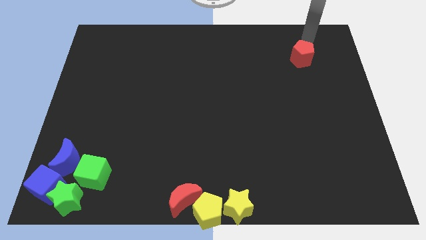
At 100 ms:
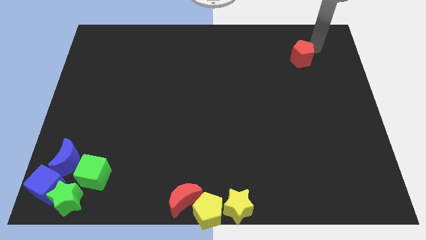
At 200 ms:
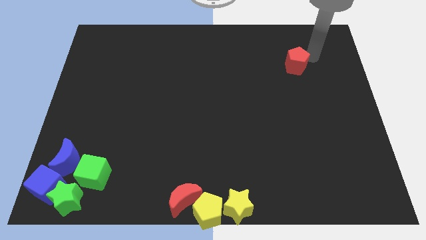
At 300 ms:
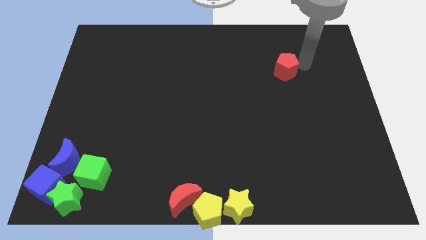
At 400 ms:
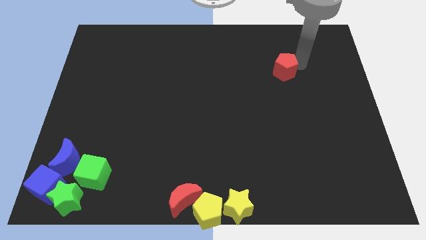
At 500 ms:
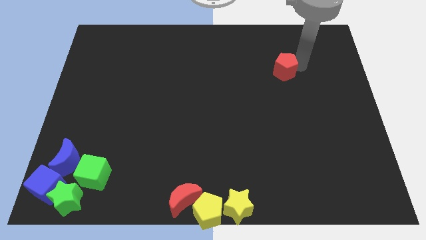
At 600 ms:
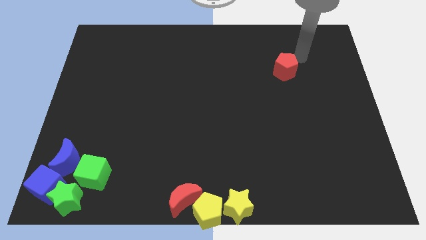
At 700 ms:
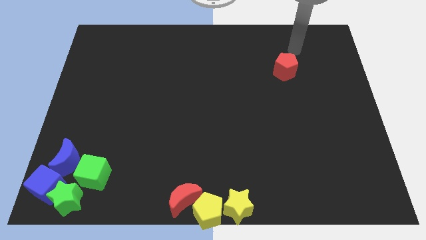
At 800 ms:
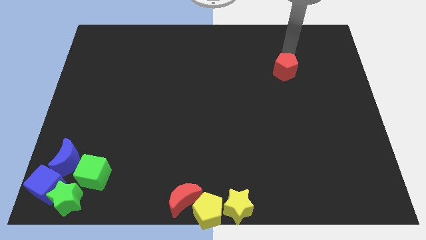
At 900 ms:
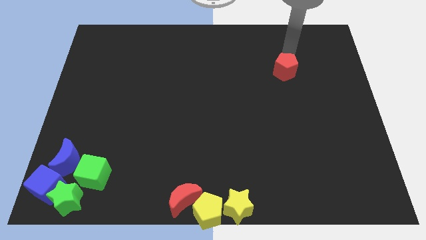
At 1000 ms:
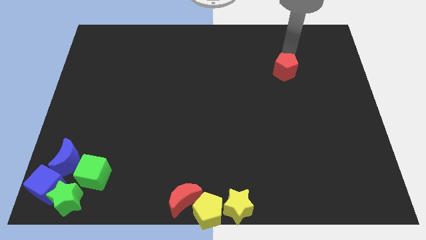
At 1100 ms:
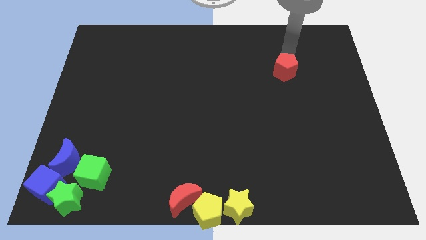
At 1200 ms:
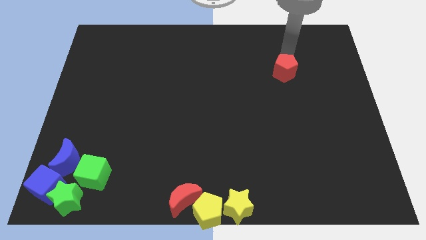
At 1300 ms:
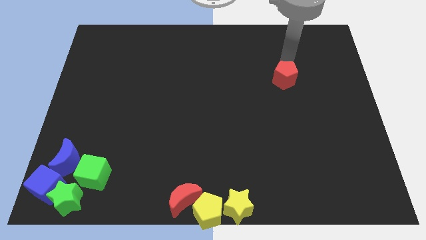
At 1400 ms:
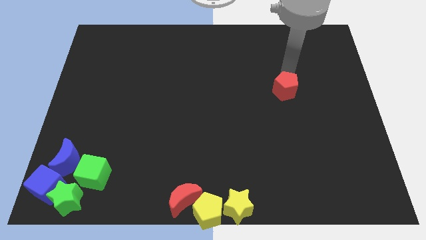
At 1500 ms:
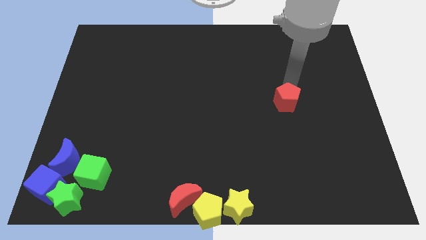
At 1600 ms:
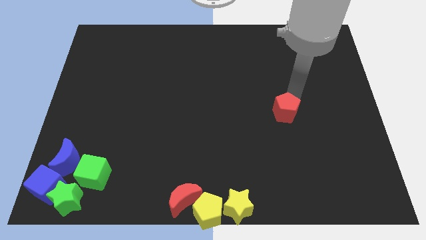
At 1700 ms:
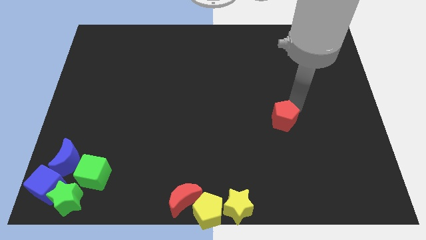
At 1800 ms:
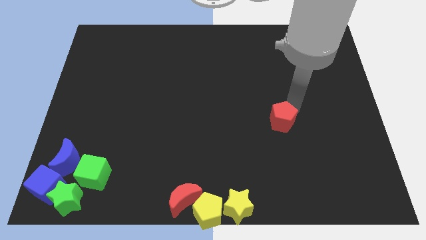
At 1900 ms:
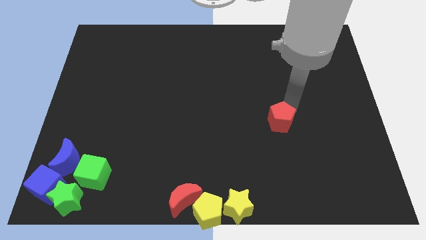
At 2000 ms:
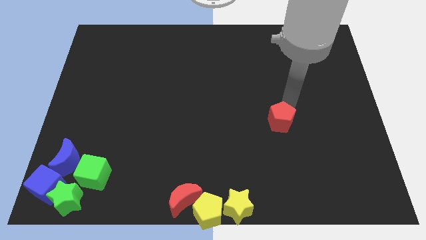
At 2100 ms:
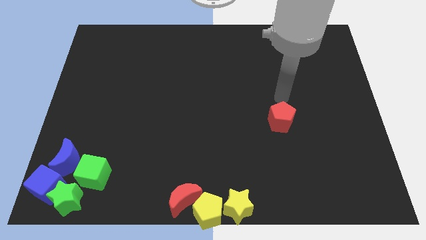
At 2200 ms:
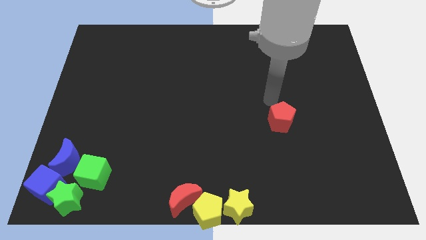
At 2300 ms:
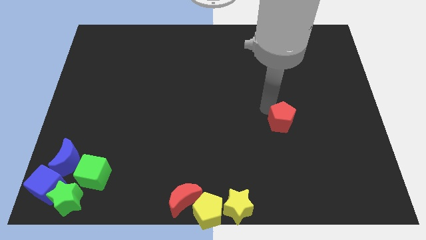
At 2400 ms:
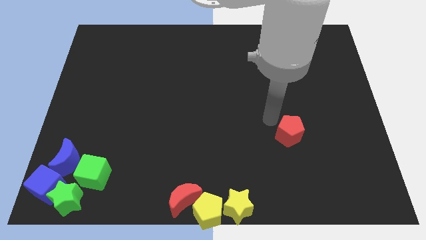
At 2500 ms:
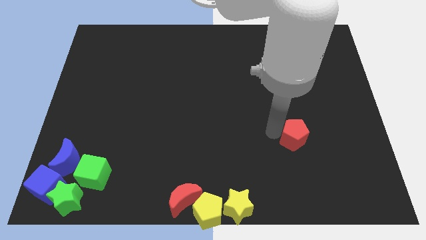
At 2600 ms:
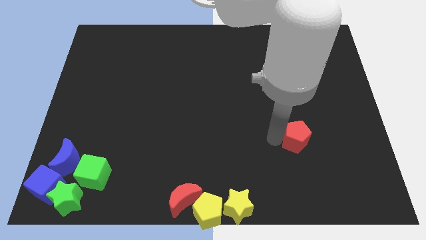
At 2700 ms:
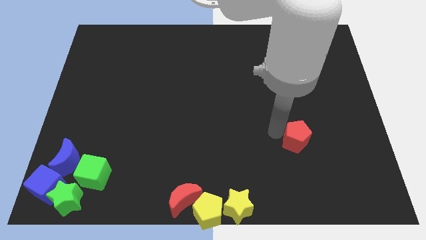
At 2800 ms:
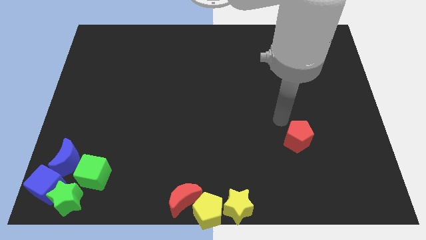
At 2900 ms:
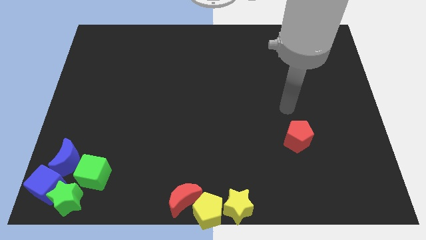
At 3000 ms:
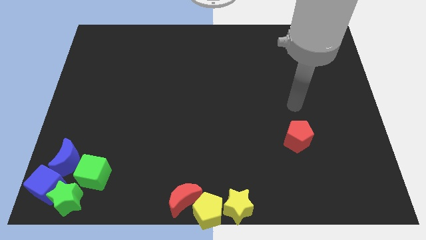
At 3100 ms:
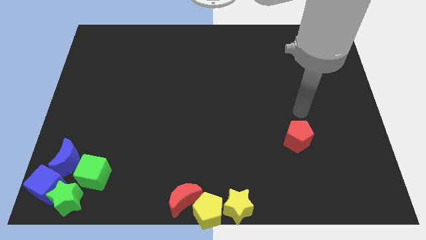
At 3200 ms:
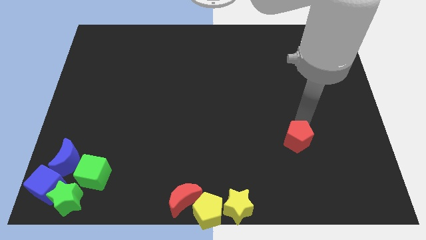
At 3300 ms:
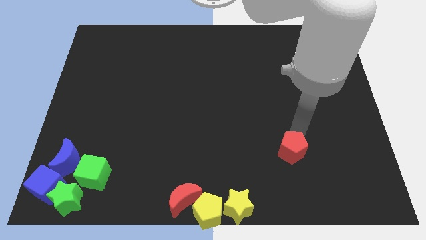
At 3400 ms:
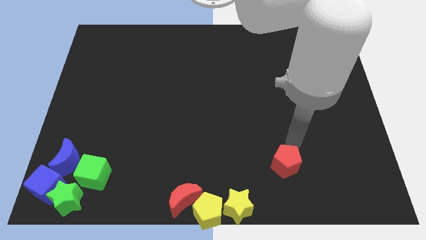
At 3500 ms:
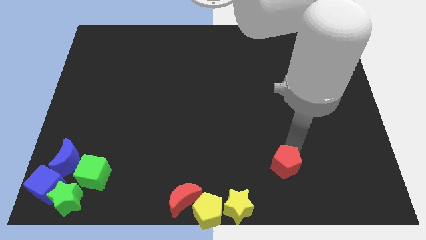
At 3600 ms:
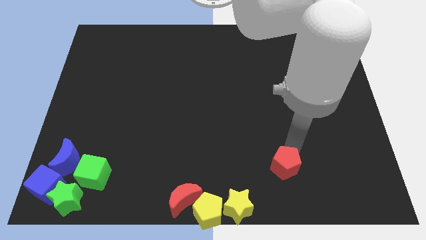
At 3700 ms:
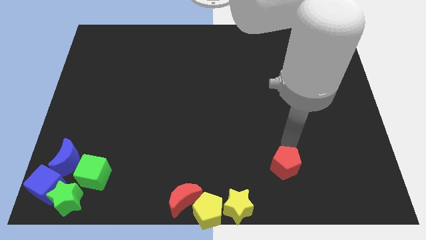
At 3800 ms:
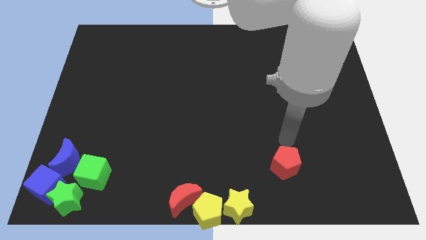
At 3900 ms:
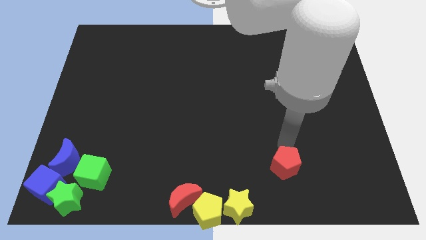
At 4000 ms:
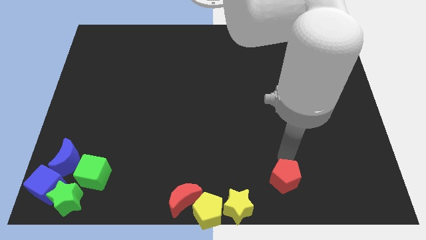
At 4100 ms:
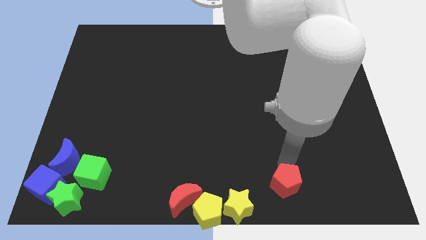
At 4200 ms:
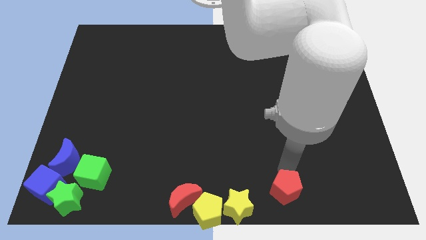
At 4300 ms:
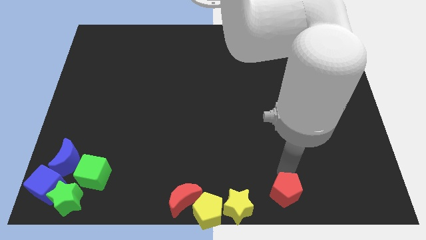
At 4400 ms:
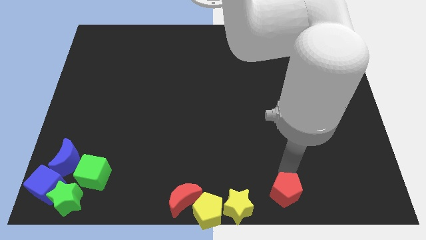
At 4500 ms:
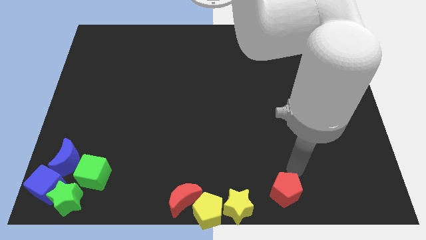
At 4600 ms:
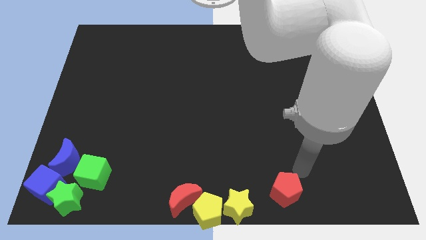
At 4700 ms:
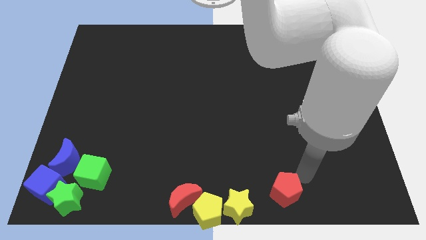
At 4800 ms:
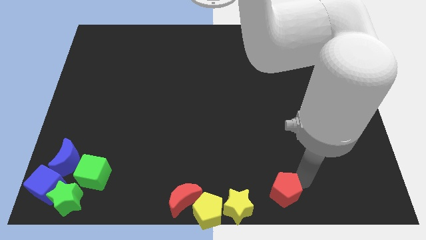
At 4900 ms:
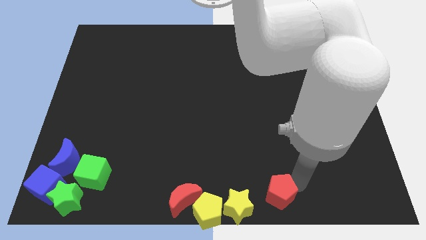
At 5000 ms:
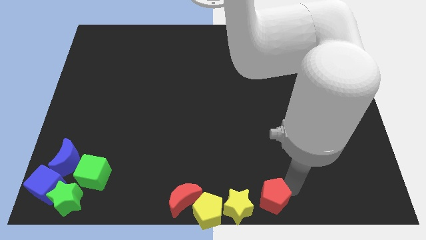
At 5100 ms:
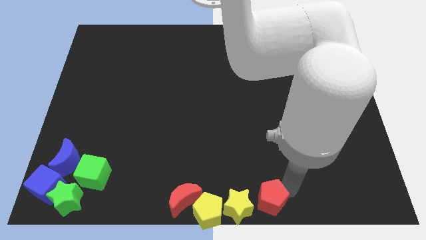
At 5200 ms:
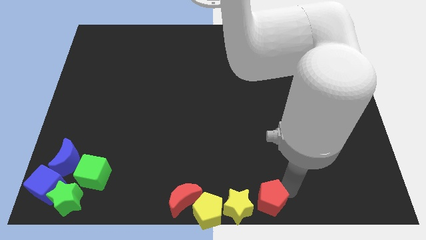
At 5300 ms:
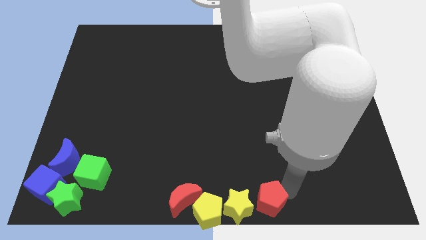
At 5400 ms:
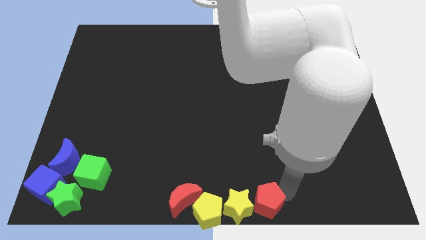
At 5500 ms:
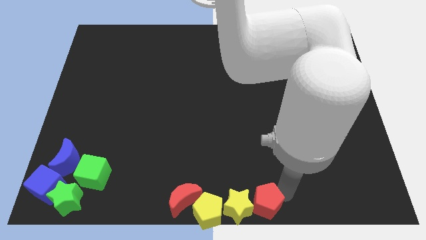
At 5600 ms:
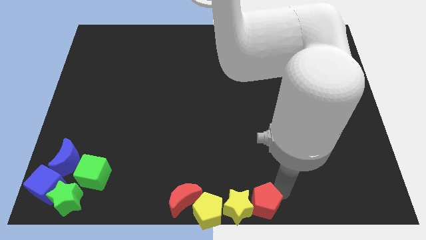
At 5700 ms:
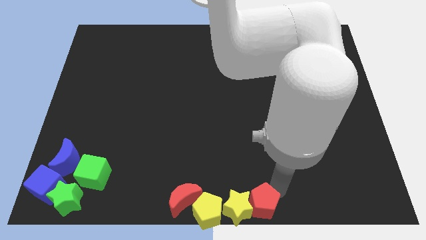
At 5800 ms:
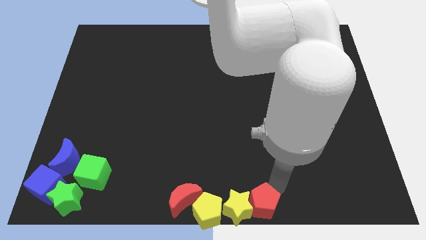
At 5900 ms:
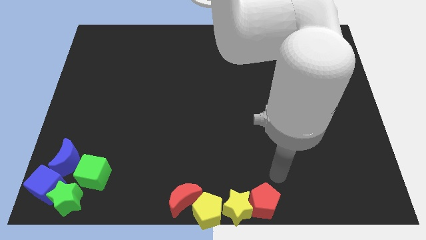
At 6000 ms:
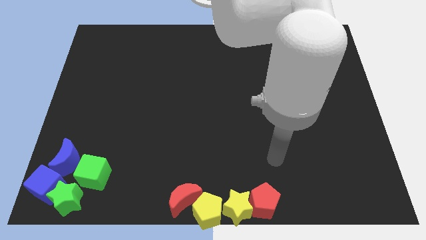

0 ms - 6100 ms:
move the red pentagon into the yellow star

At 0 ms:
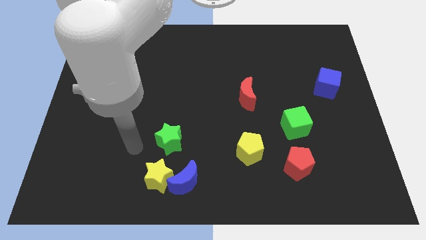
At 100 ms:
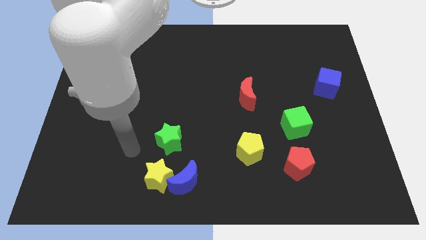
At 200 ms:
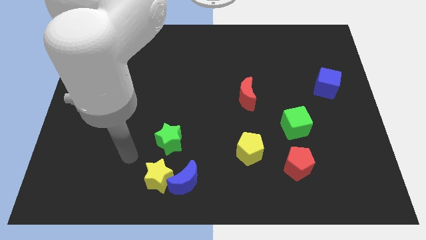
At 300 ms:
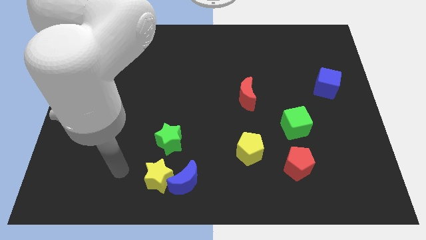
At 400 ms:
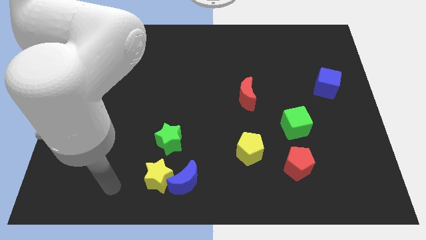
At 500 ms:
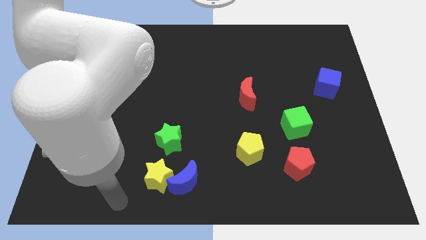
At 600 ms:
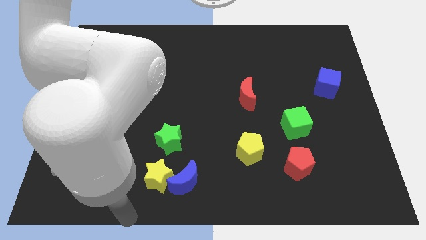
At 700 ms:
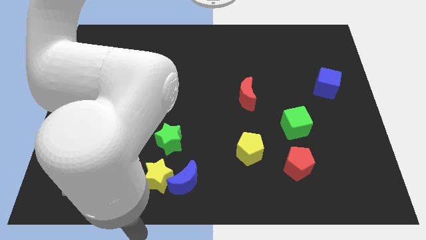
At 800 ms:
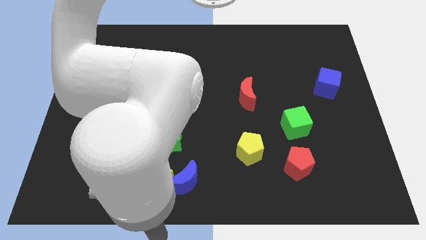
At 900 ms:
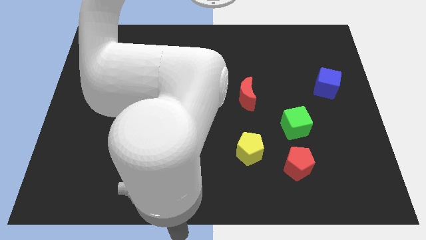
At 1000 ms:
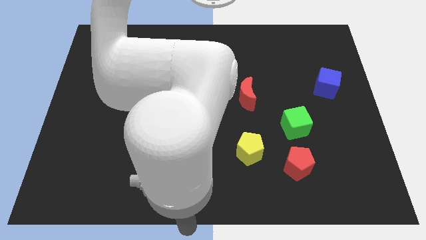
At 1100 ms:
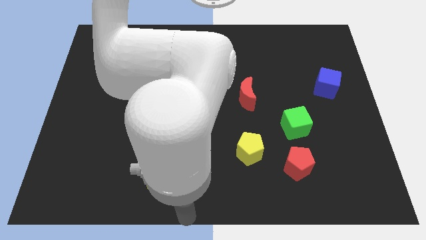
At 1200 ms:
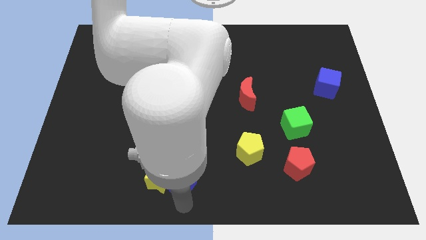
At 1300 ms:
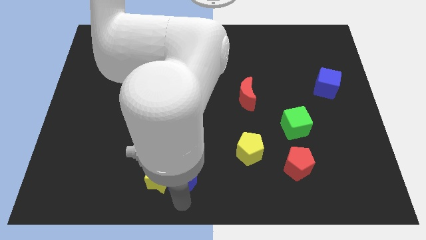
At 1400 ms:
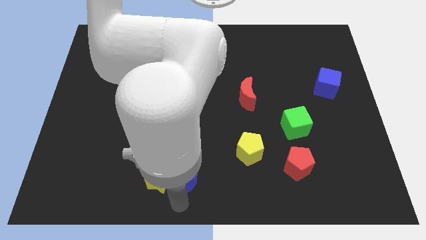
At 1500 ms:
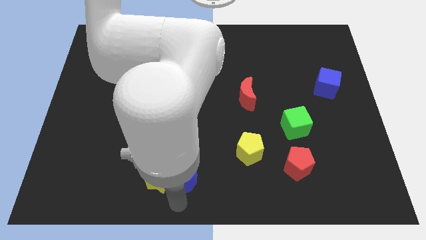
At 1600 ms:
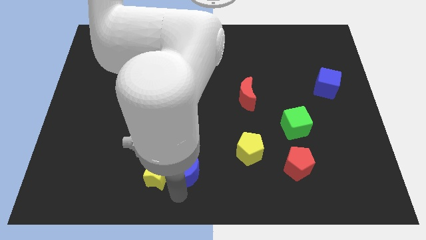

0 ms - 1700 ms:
move arm towards the blue crescent on the bottom left of the board

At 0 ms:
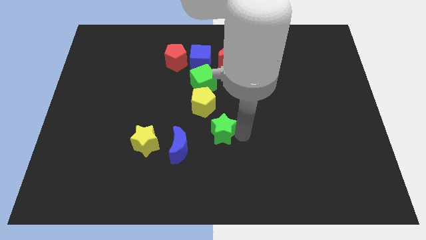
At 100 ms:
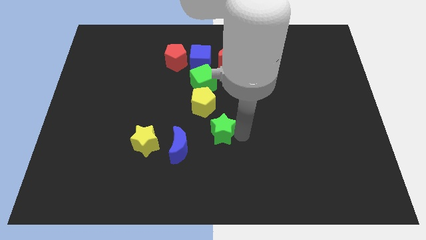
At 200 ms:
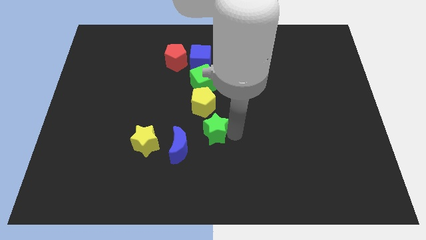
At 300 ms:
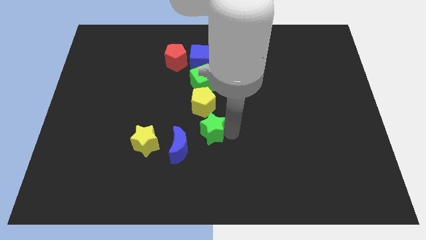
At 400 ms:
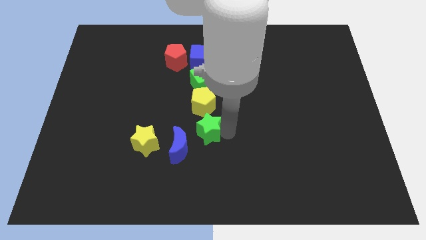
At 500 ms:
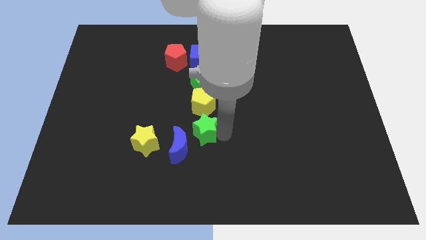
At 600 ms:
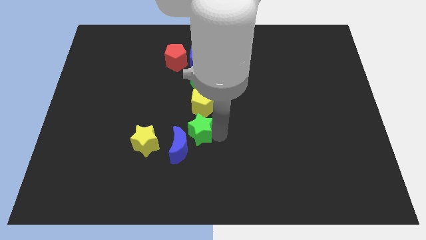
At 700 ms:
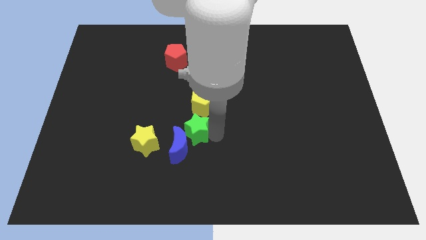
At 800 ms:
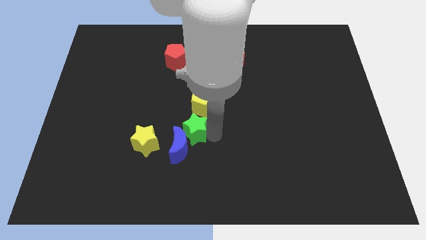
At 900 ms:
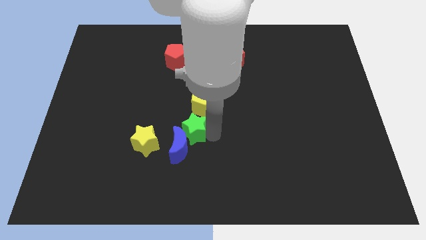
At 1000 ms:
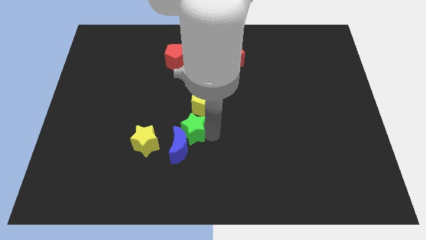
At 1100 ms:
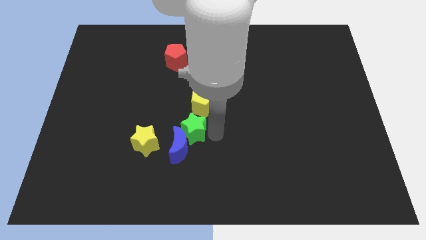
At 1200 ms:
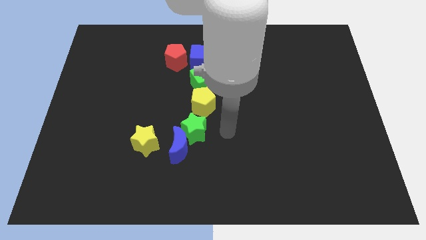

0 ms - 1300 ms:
place the green star in between the yellow pentagon and blue crescent
